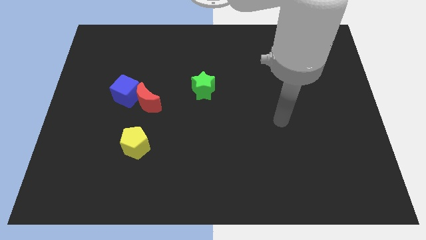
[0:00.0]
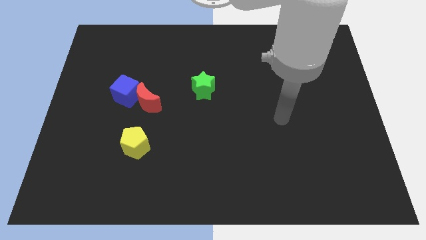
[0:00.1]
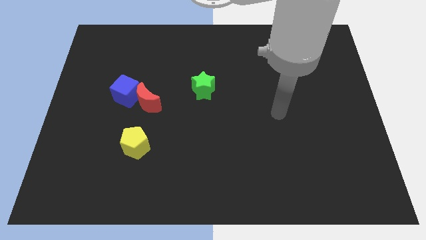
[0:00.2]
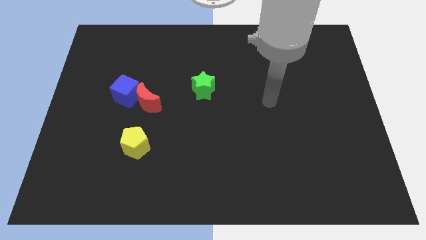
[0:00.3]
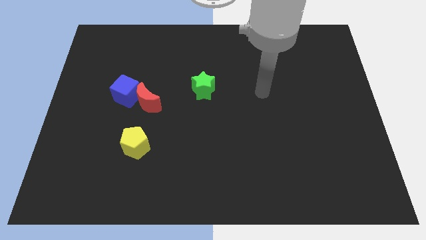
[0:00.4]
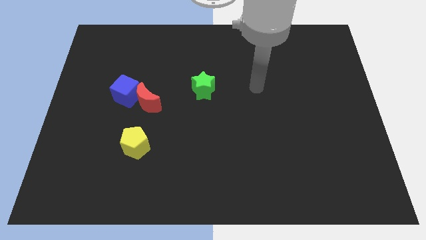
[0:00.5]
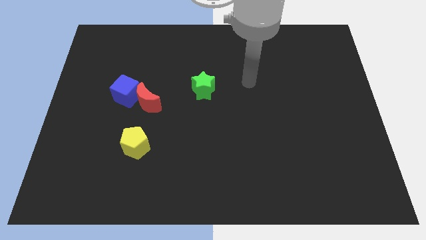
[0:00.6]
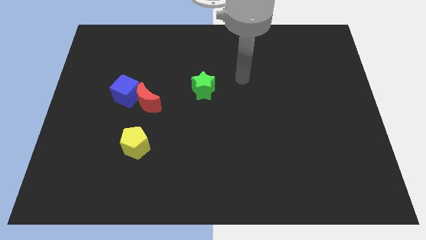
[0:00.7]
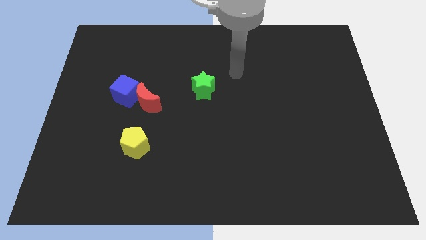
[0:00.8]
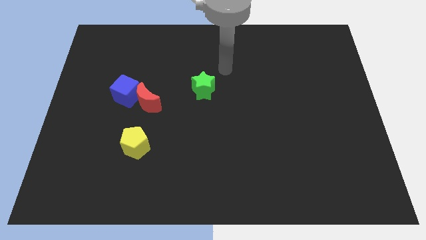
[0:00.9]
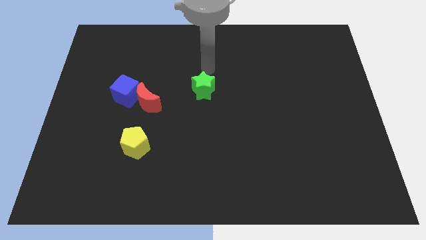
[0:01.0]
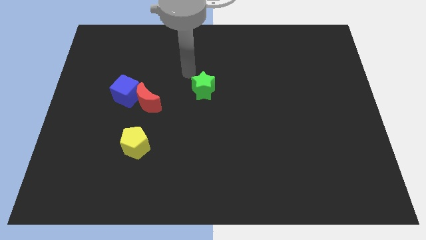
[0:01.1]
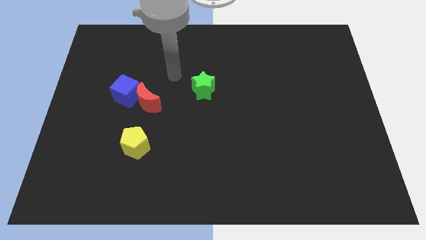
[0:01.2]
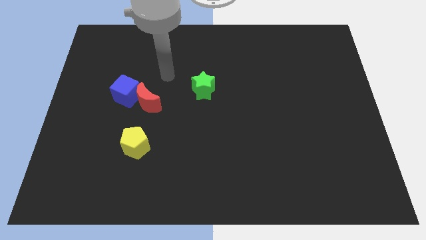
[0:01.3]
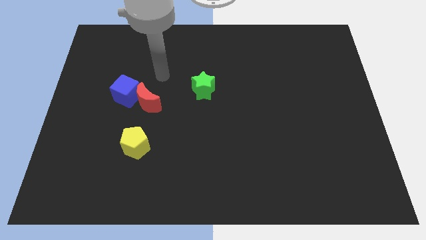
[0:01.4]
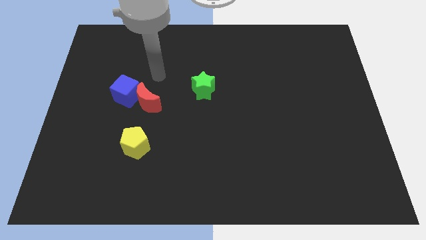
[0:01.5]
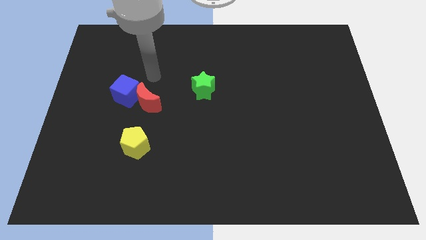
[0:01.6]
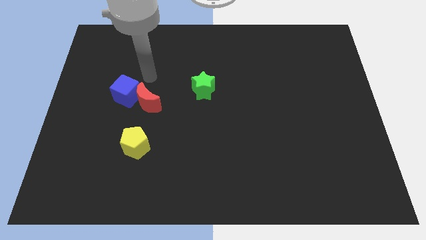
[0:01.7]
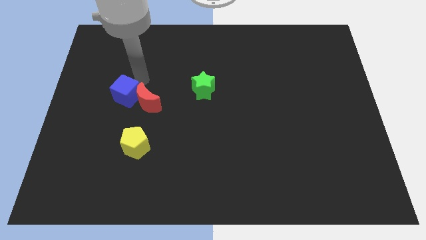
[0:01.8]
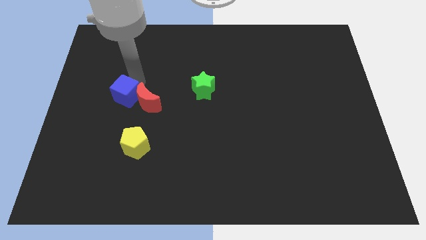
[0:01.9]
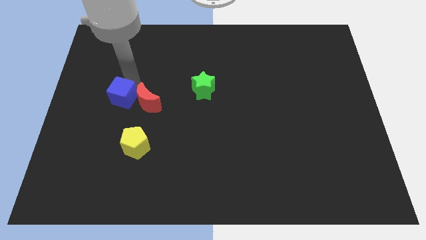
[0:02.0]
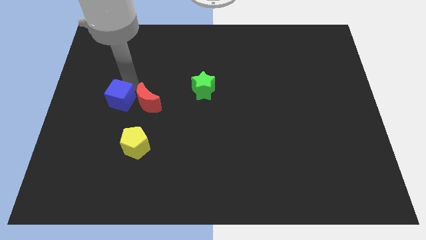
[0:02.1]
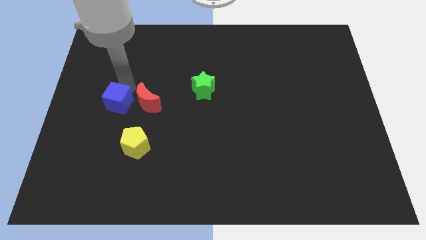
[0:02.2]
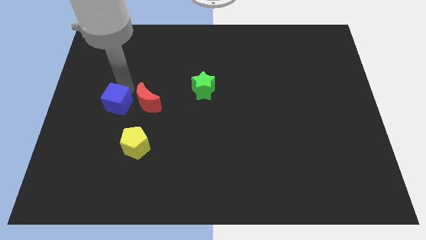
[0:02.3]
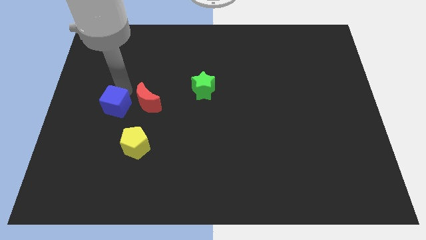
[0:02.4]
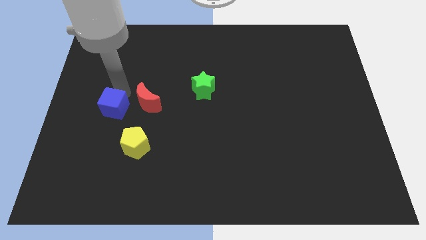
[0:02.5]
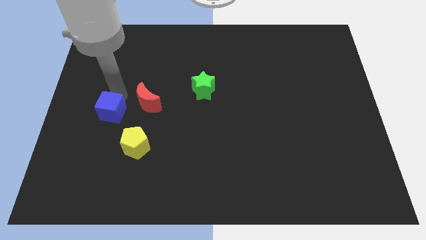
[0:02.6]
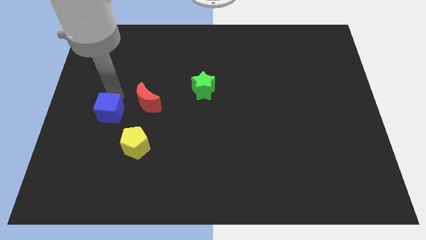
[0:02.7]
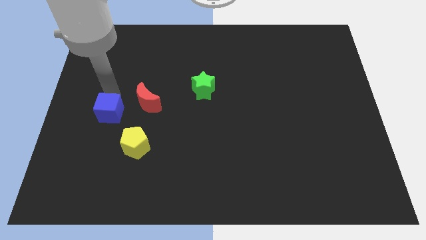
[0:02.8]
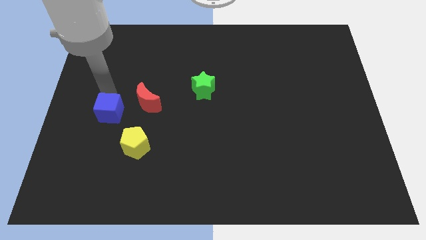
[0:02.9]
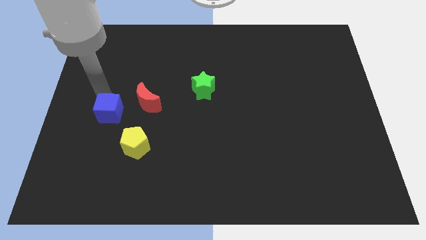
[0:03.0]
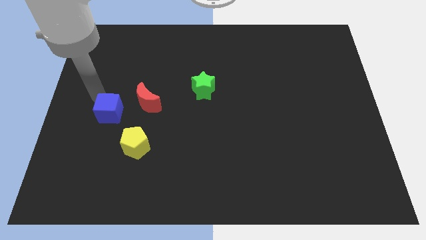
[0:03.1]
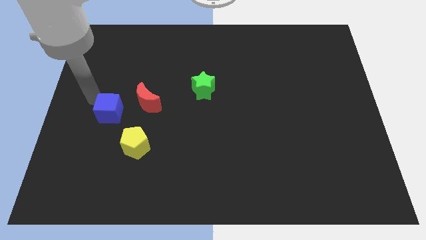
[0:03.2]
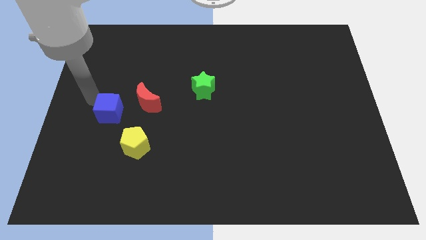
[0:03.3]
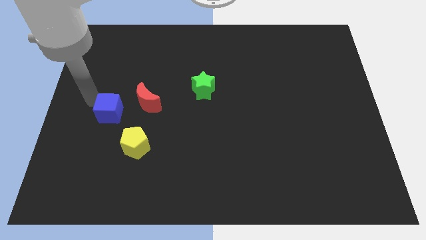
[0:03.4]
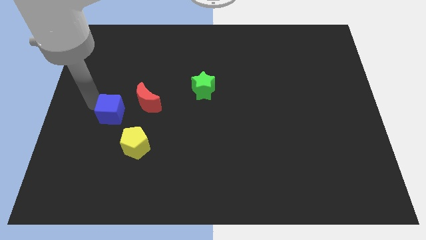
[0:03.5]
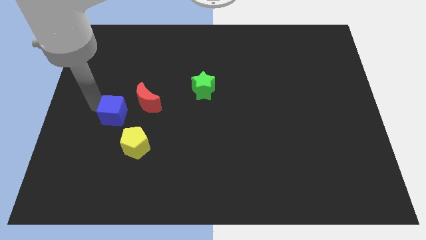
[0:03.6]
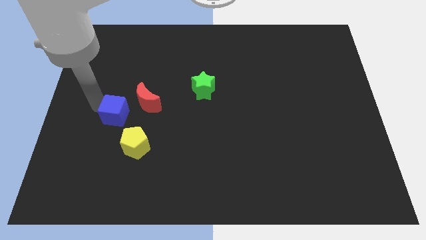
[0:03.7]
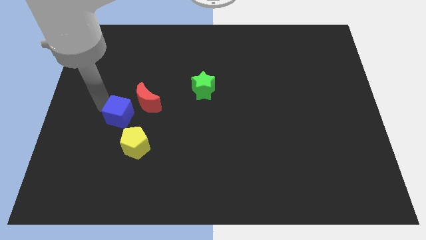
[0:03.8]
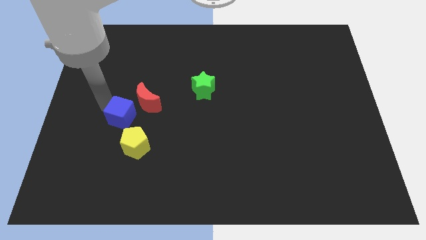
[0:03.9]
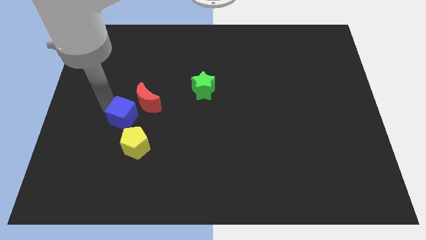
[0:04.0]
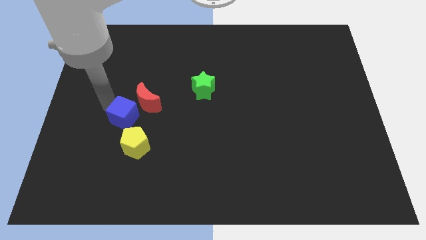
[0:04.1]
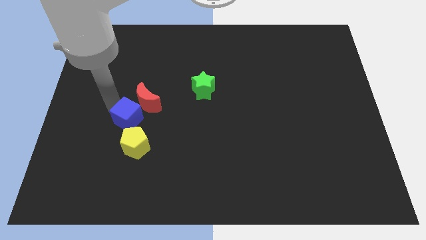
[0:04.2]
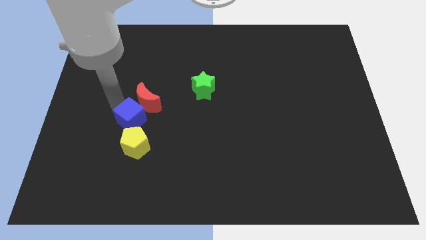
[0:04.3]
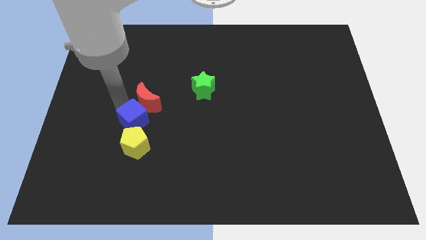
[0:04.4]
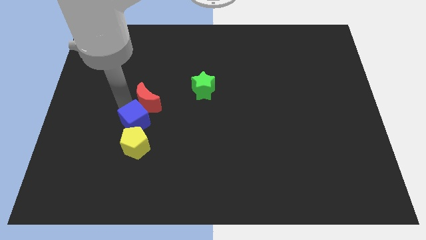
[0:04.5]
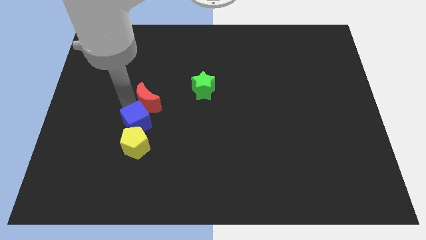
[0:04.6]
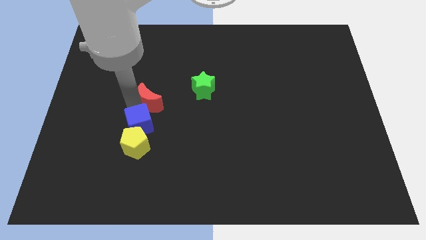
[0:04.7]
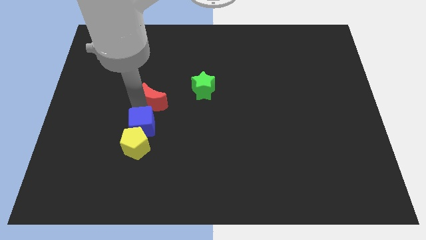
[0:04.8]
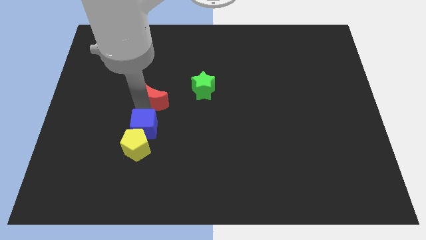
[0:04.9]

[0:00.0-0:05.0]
move the cube towards the yellow pentagon

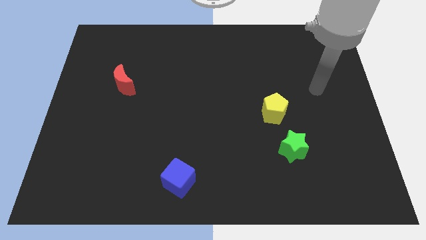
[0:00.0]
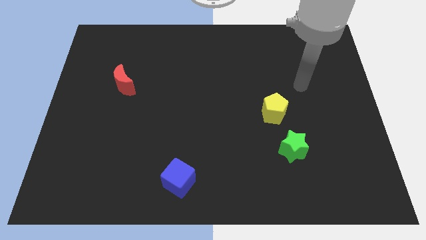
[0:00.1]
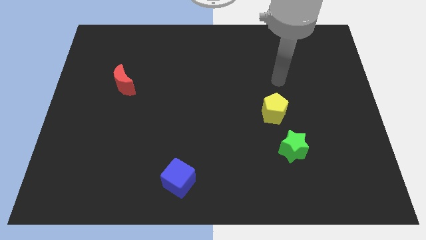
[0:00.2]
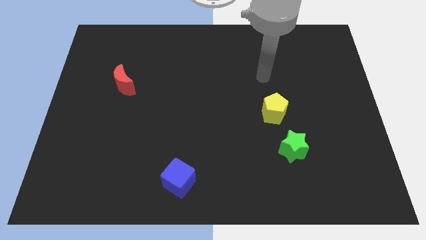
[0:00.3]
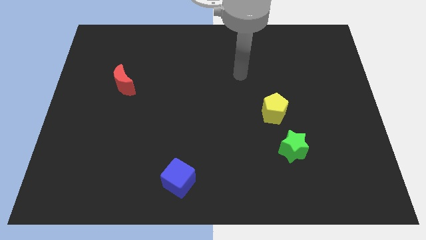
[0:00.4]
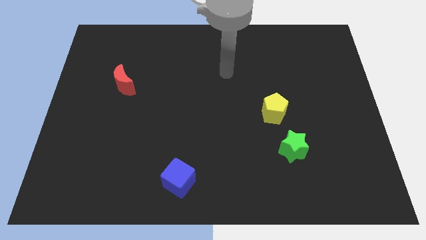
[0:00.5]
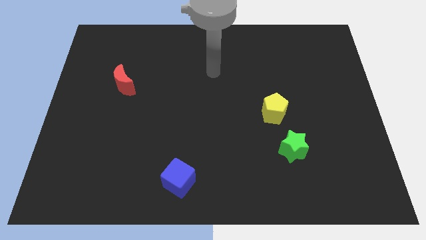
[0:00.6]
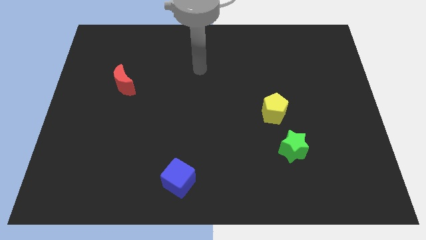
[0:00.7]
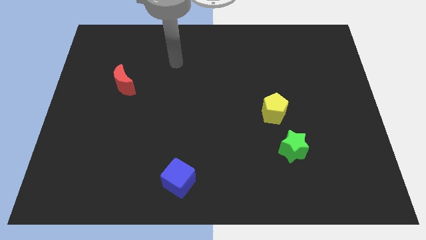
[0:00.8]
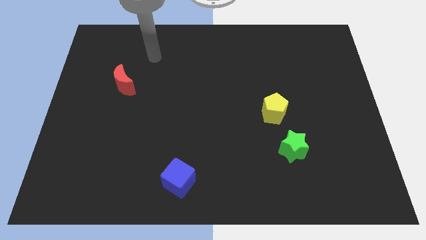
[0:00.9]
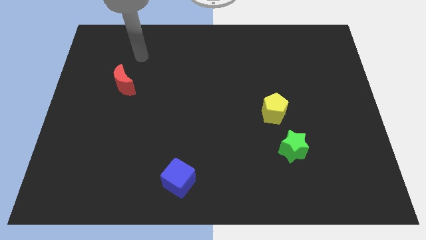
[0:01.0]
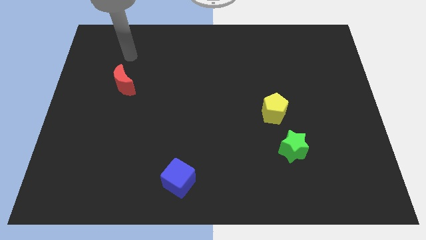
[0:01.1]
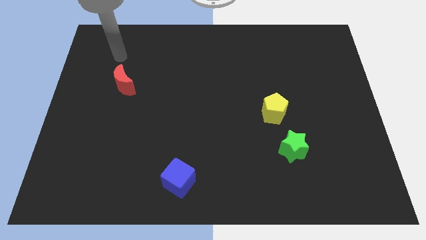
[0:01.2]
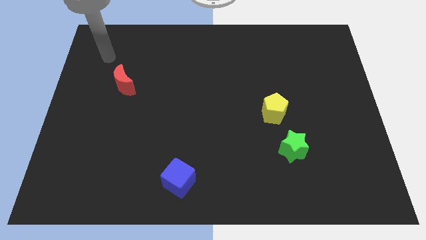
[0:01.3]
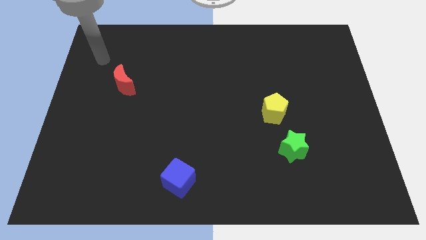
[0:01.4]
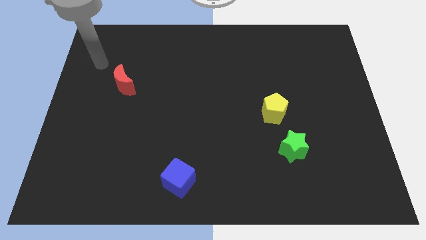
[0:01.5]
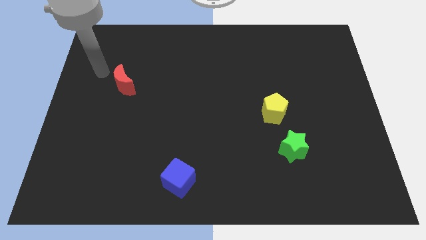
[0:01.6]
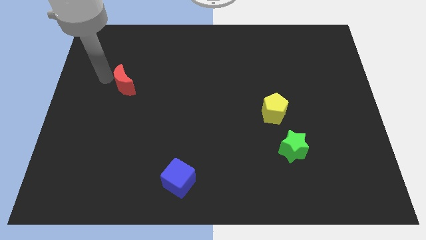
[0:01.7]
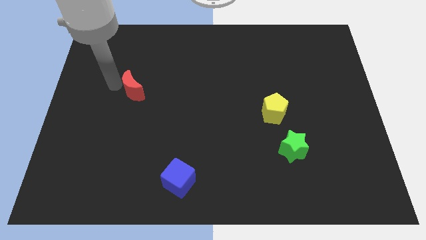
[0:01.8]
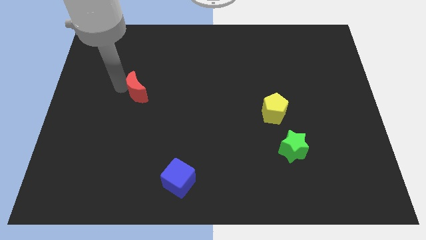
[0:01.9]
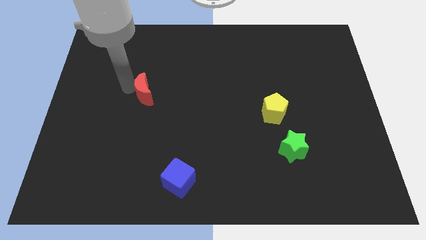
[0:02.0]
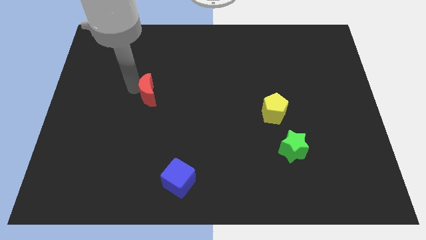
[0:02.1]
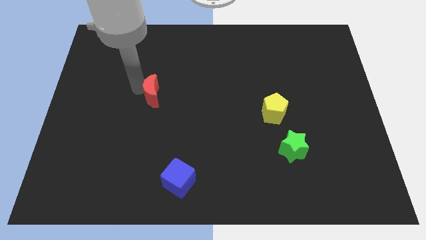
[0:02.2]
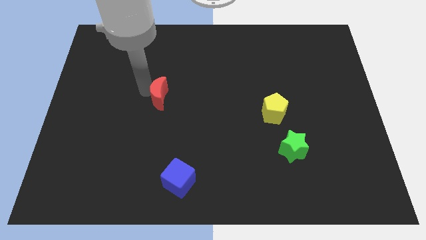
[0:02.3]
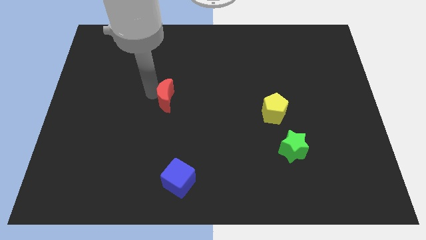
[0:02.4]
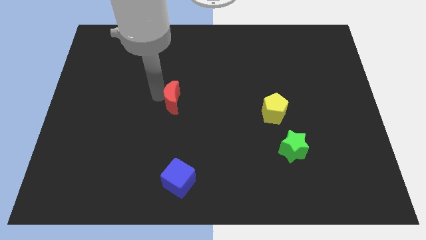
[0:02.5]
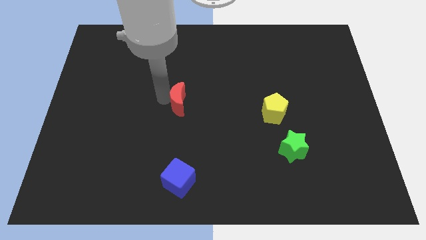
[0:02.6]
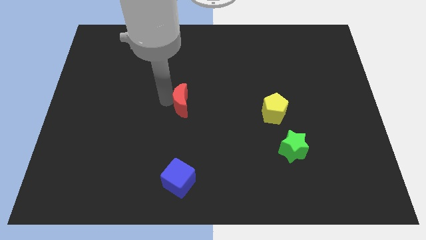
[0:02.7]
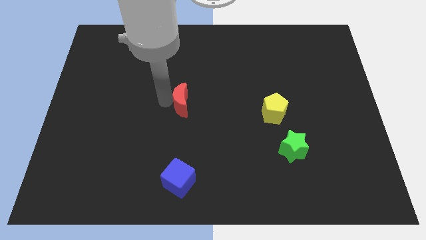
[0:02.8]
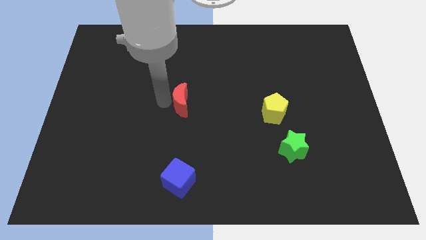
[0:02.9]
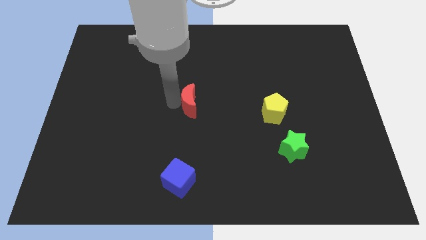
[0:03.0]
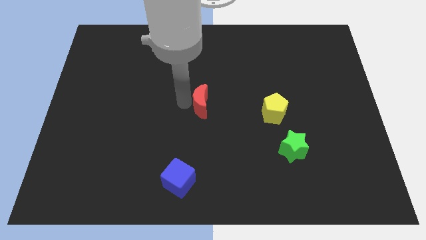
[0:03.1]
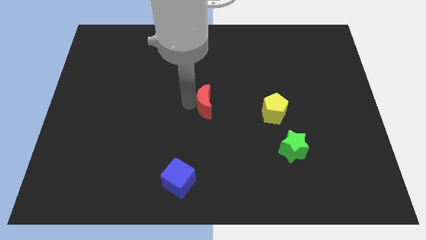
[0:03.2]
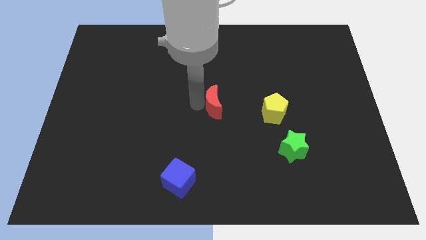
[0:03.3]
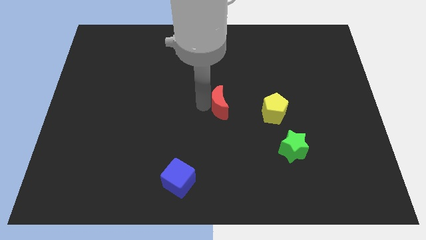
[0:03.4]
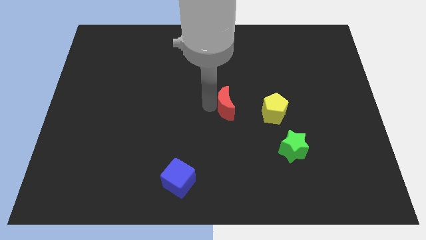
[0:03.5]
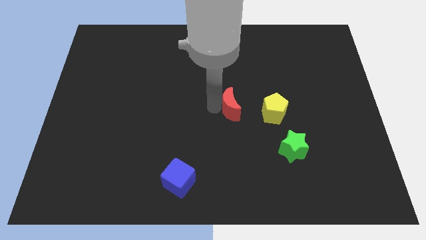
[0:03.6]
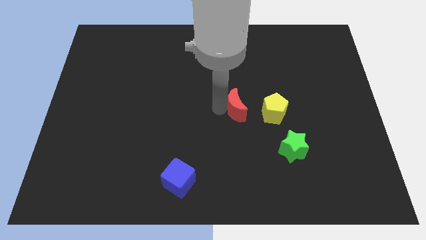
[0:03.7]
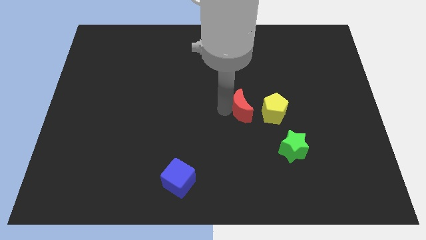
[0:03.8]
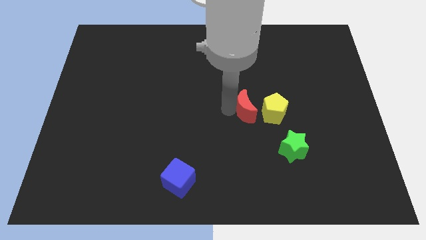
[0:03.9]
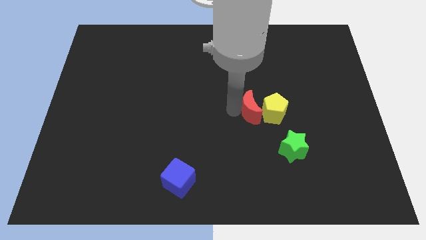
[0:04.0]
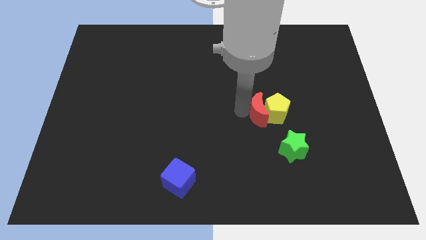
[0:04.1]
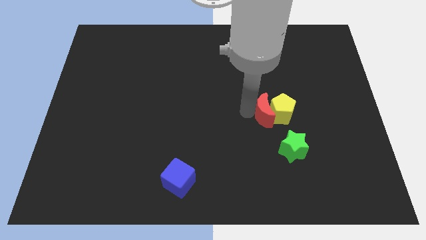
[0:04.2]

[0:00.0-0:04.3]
slide the red block next to the yellow pentagon
